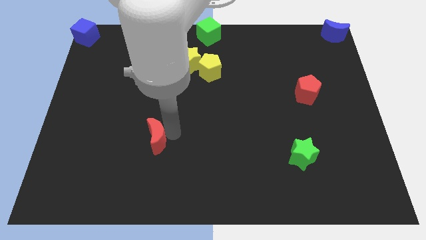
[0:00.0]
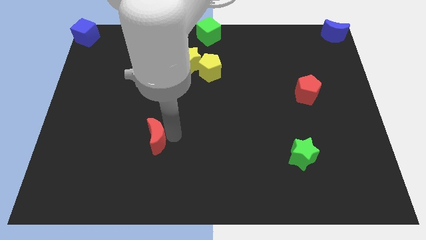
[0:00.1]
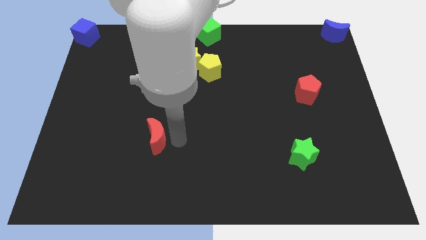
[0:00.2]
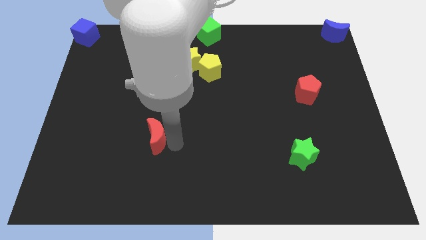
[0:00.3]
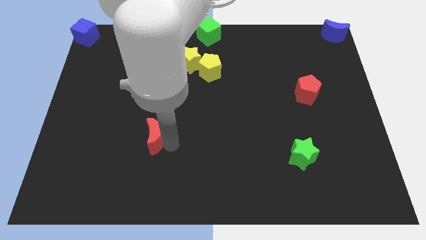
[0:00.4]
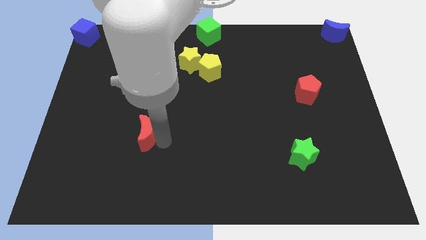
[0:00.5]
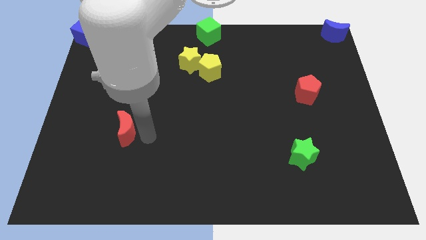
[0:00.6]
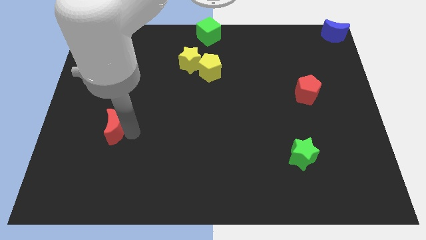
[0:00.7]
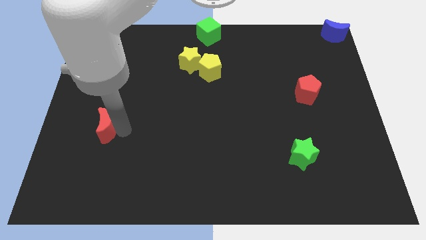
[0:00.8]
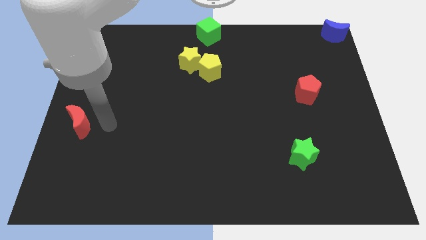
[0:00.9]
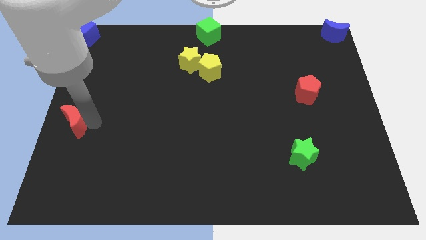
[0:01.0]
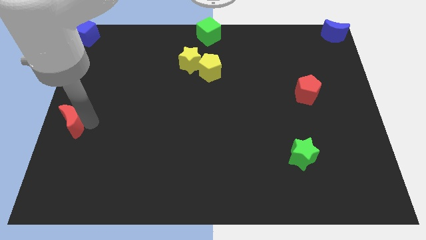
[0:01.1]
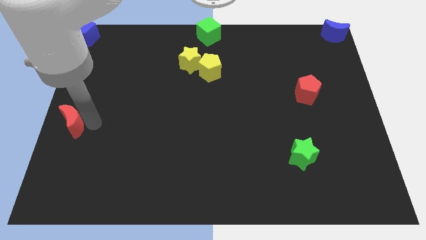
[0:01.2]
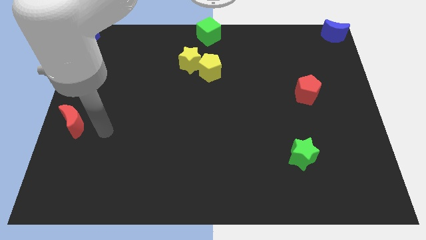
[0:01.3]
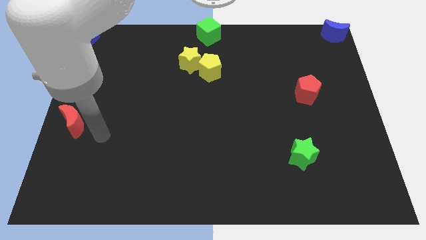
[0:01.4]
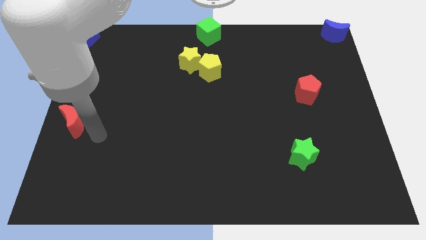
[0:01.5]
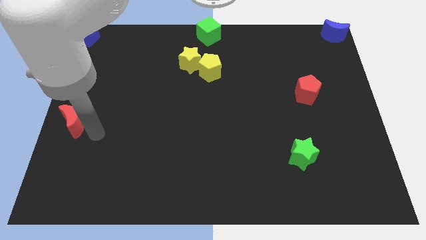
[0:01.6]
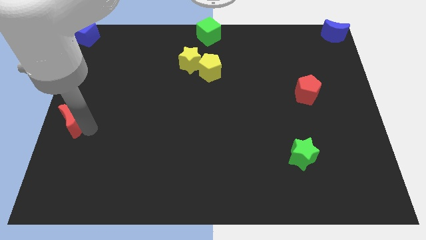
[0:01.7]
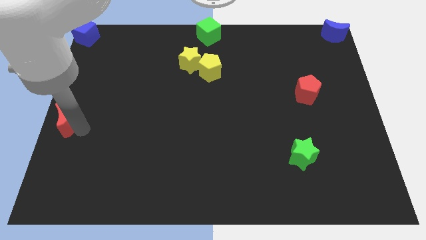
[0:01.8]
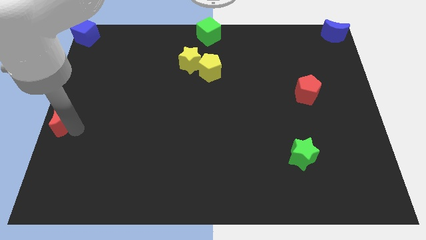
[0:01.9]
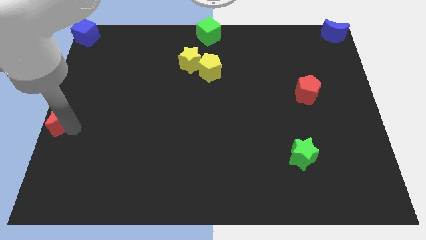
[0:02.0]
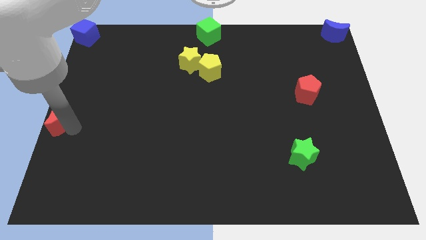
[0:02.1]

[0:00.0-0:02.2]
place red moon to the center left side

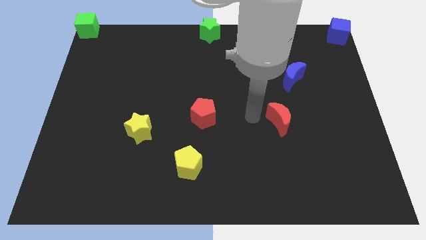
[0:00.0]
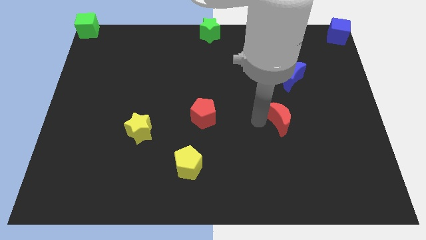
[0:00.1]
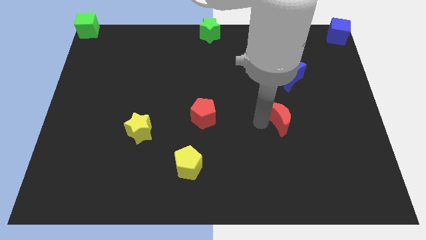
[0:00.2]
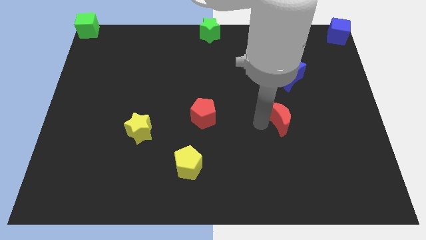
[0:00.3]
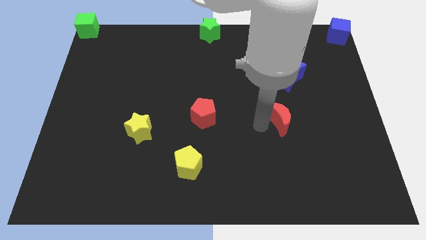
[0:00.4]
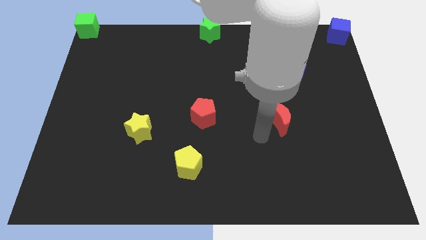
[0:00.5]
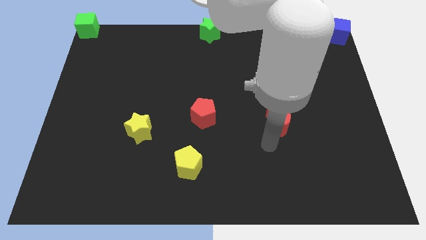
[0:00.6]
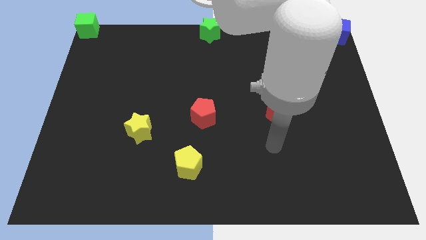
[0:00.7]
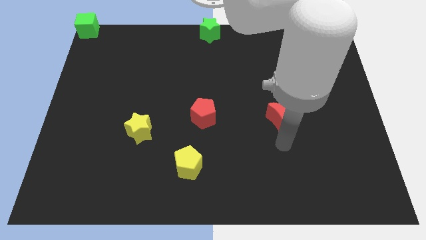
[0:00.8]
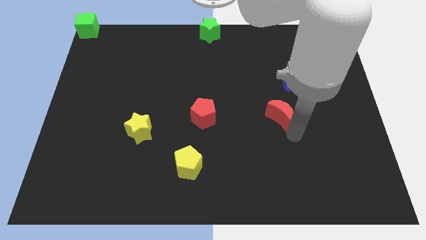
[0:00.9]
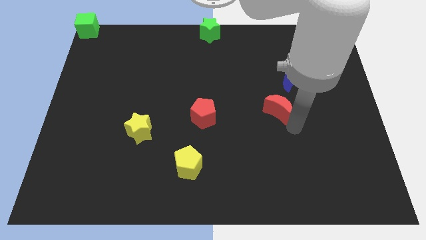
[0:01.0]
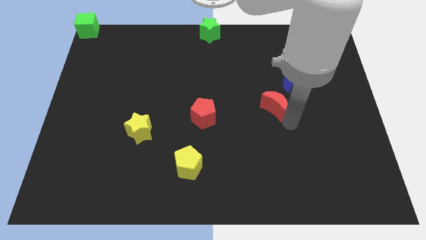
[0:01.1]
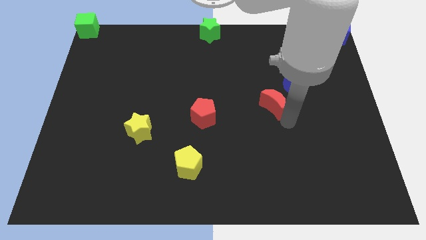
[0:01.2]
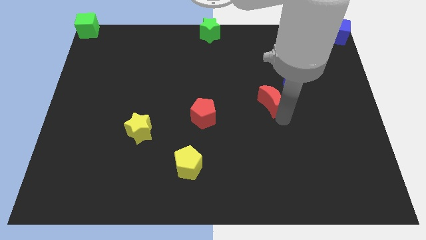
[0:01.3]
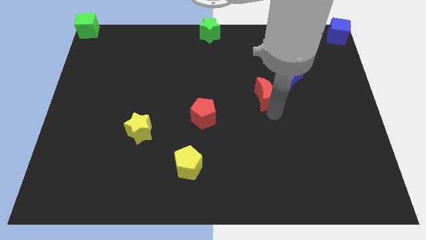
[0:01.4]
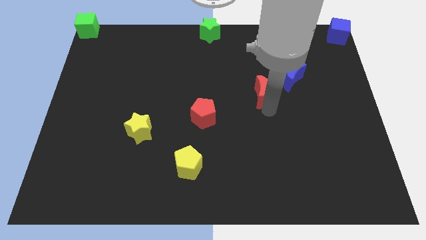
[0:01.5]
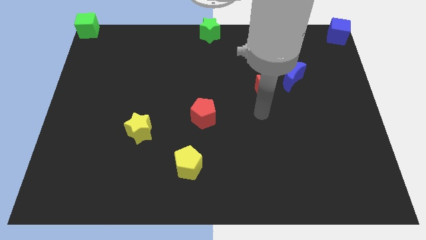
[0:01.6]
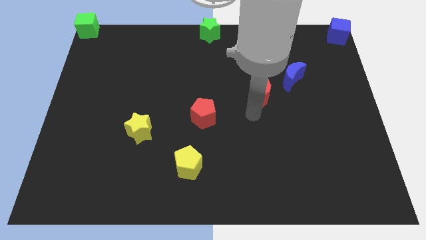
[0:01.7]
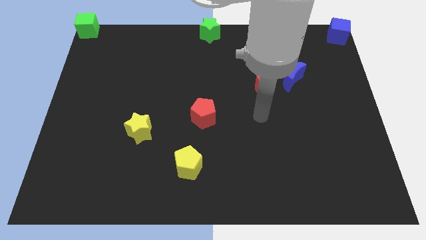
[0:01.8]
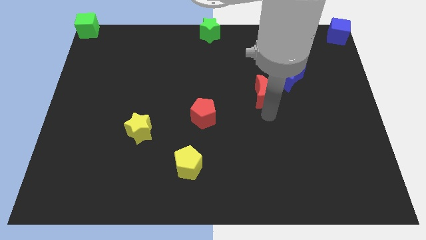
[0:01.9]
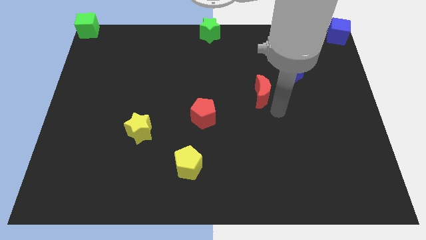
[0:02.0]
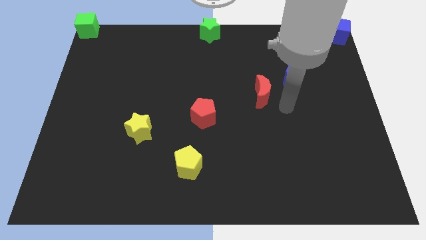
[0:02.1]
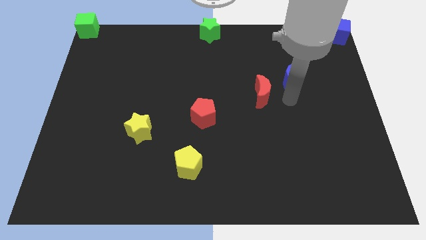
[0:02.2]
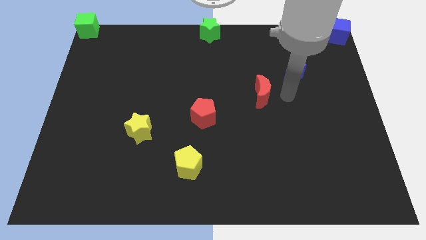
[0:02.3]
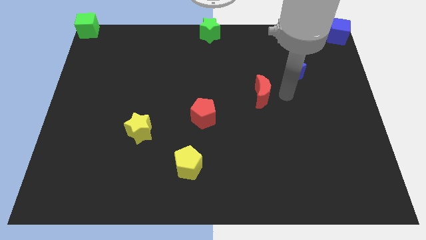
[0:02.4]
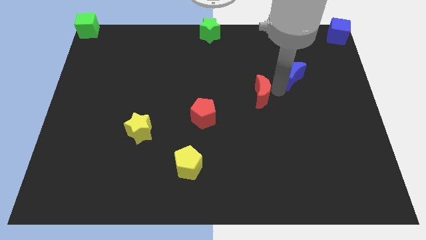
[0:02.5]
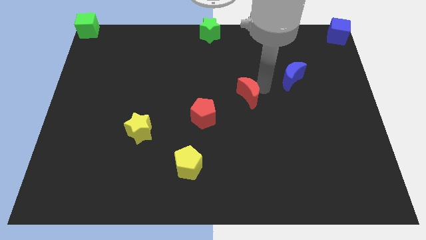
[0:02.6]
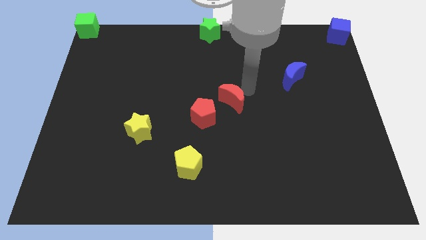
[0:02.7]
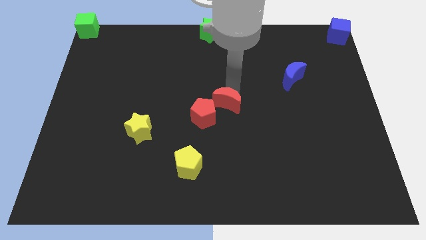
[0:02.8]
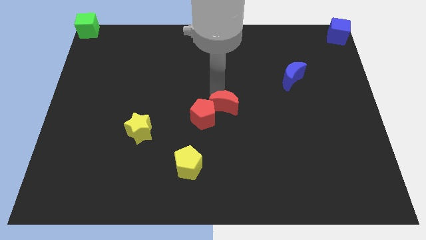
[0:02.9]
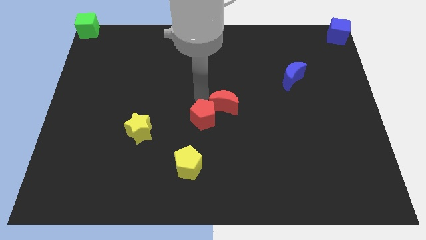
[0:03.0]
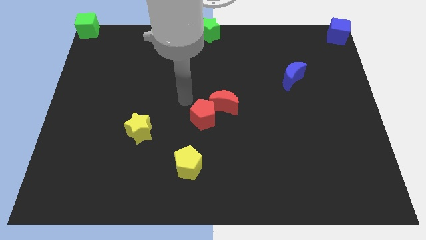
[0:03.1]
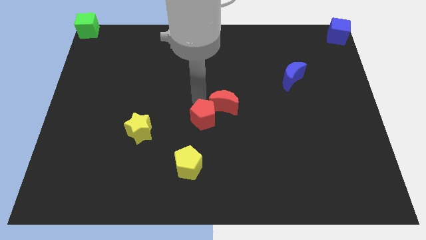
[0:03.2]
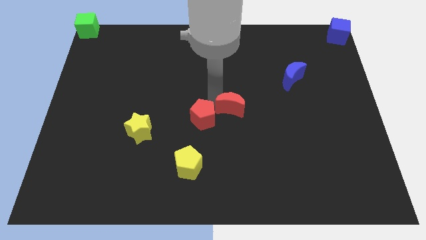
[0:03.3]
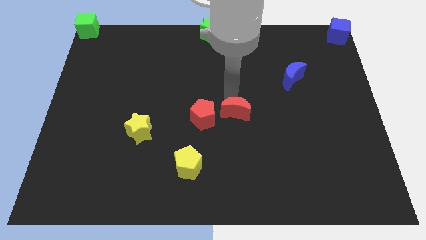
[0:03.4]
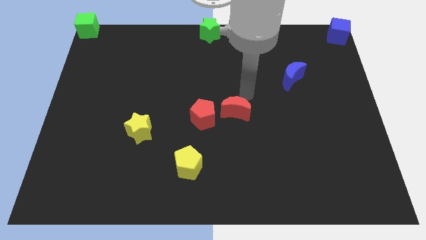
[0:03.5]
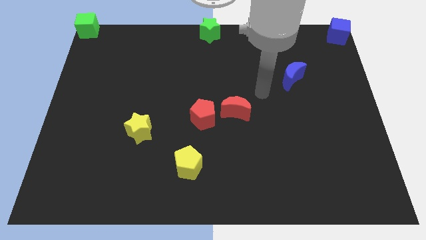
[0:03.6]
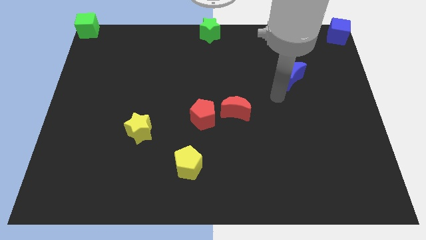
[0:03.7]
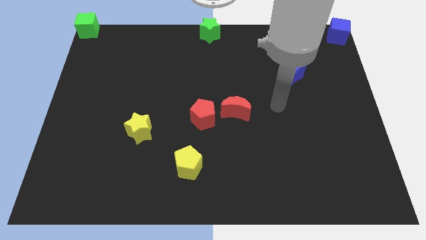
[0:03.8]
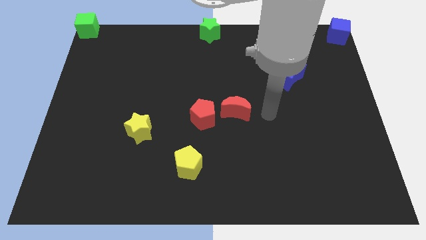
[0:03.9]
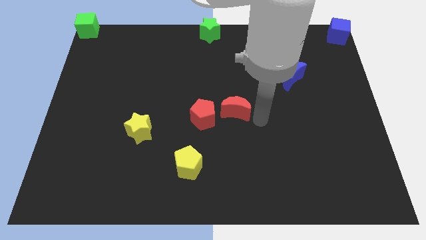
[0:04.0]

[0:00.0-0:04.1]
place red moon to the right of red pentagon

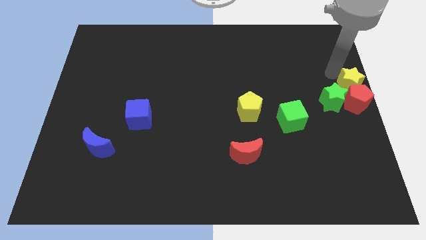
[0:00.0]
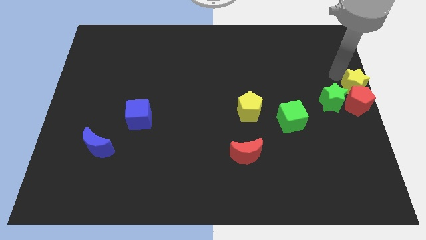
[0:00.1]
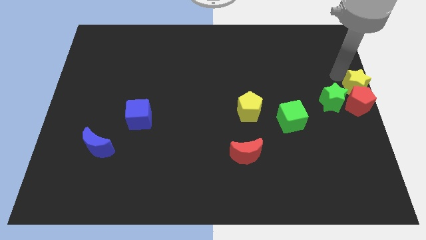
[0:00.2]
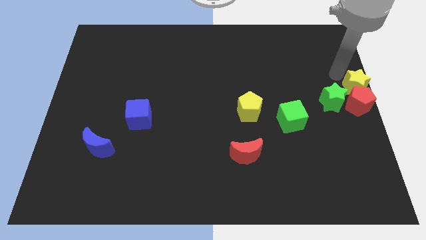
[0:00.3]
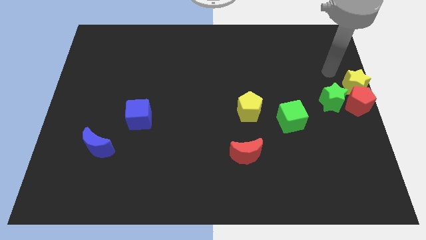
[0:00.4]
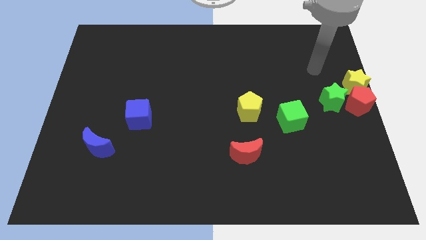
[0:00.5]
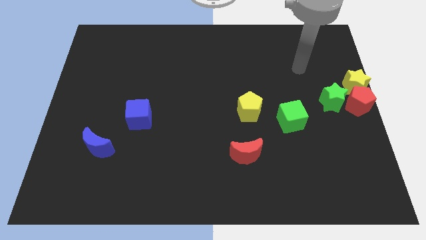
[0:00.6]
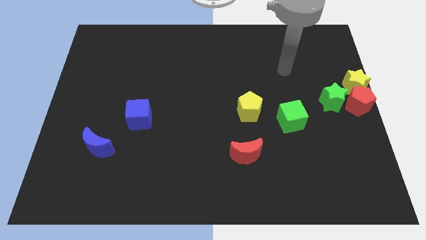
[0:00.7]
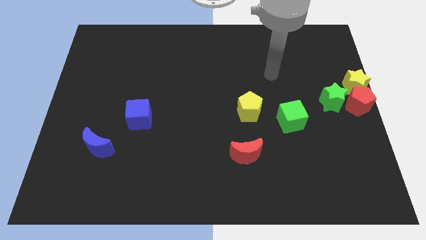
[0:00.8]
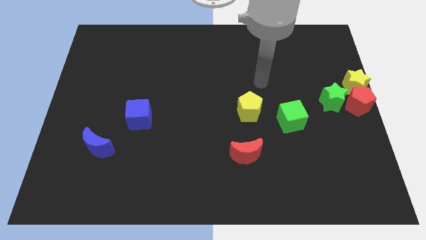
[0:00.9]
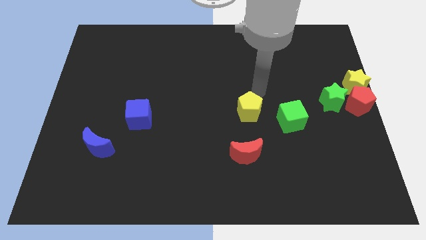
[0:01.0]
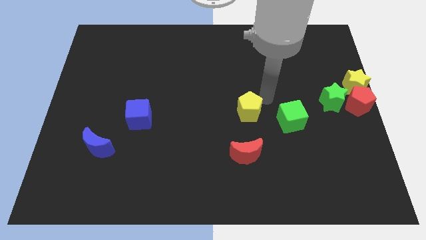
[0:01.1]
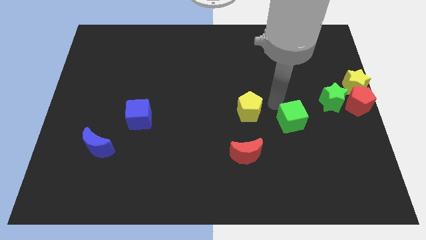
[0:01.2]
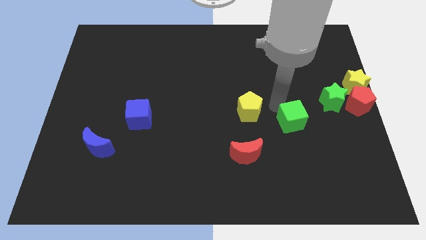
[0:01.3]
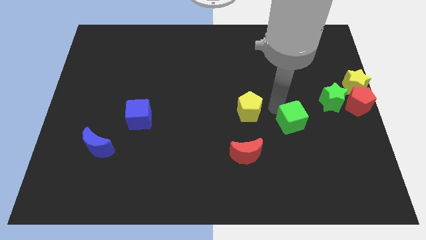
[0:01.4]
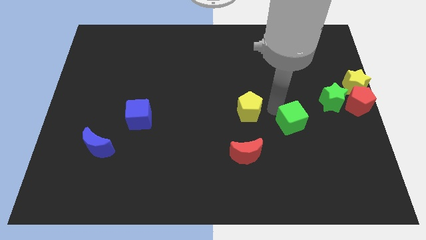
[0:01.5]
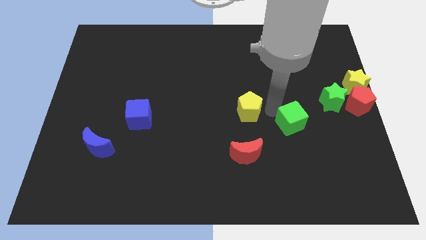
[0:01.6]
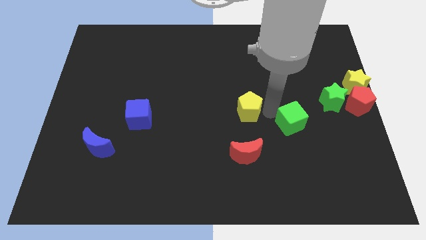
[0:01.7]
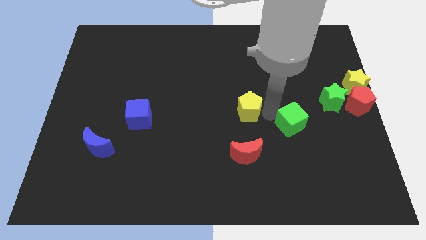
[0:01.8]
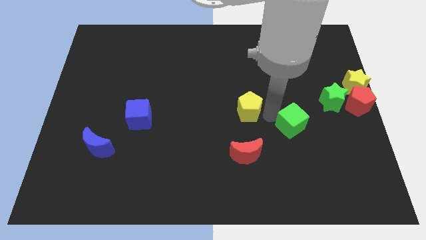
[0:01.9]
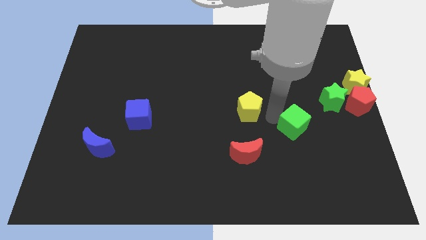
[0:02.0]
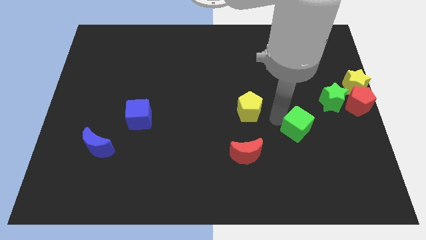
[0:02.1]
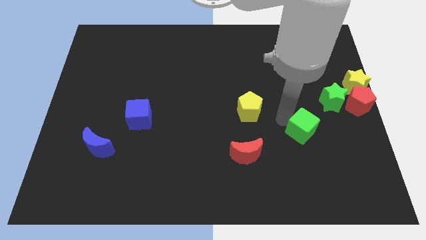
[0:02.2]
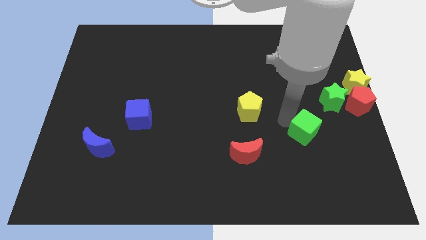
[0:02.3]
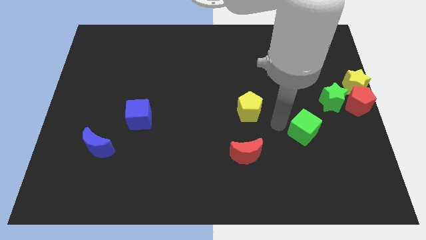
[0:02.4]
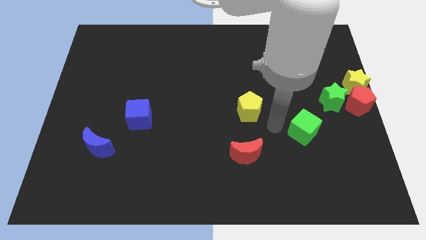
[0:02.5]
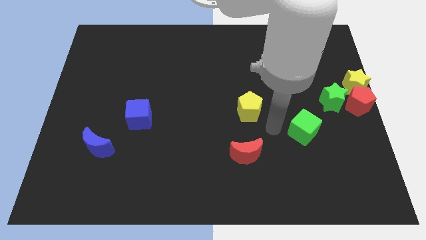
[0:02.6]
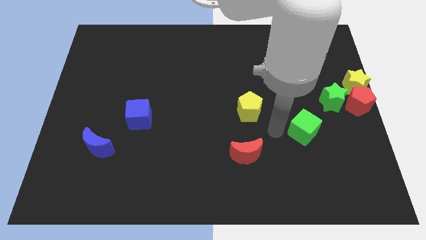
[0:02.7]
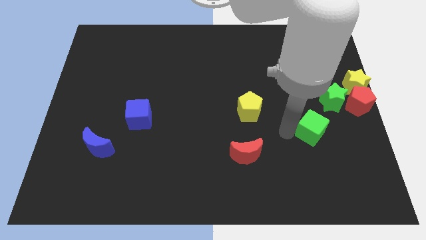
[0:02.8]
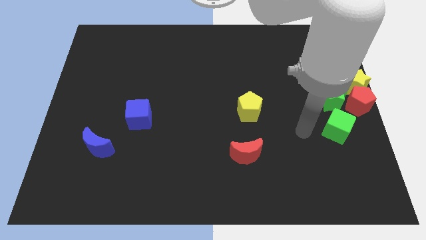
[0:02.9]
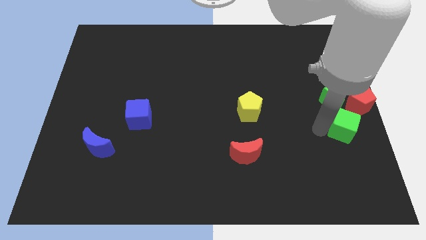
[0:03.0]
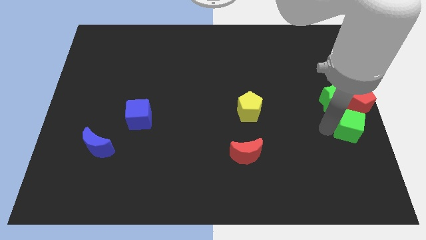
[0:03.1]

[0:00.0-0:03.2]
push the green cube towards the green star
